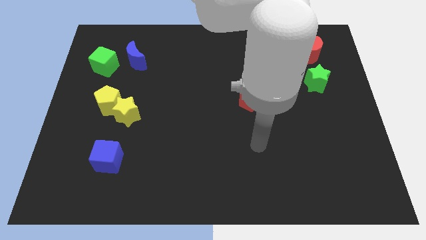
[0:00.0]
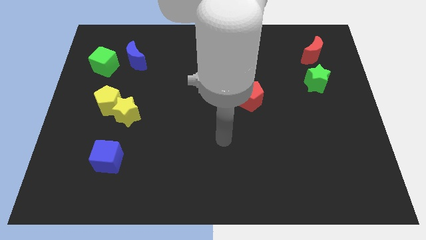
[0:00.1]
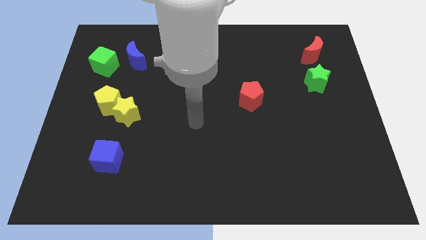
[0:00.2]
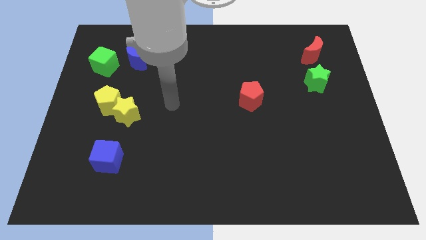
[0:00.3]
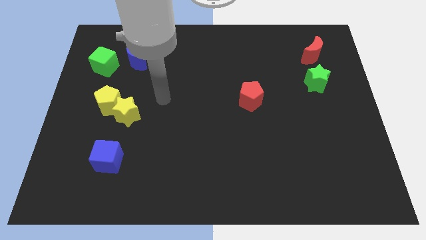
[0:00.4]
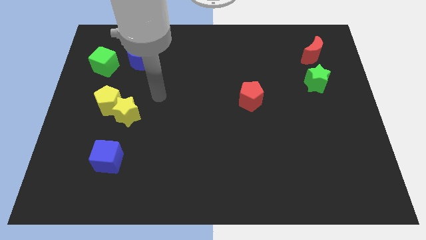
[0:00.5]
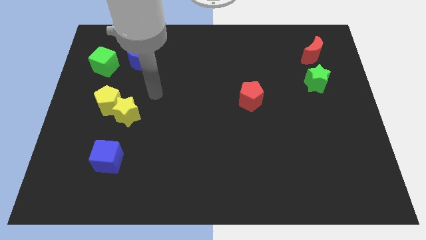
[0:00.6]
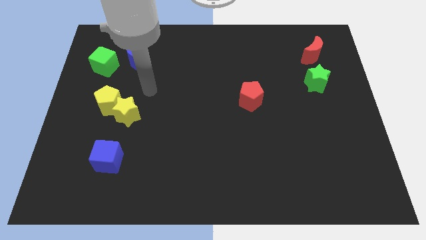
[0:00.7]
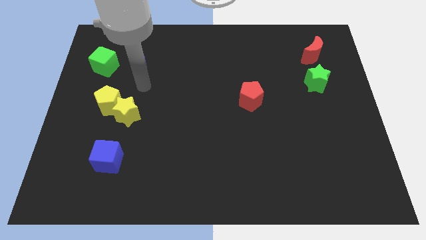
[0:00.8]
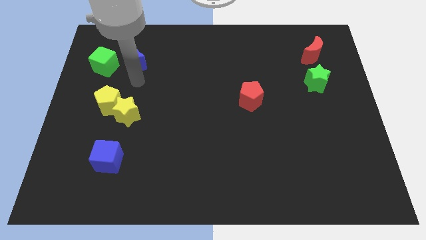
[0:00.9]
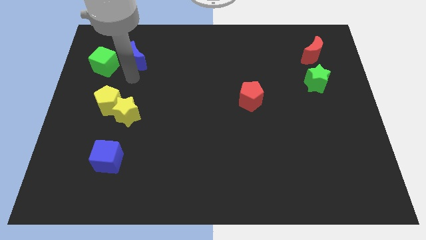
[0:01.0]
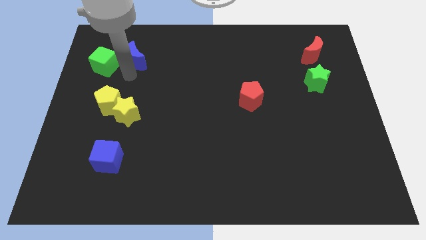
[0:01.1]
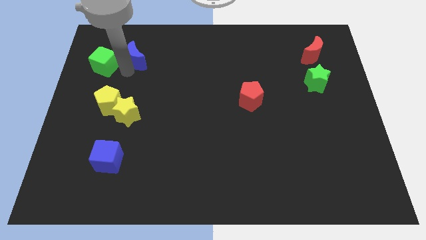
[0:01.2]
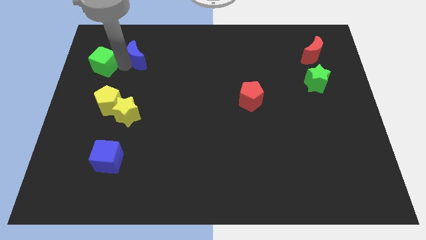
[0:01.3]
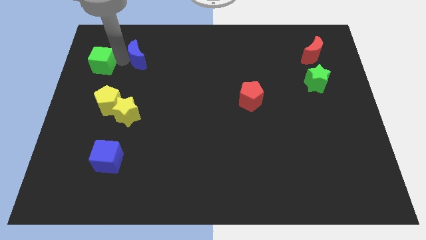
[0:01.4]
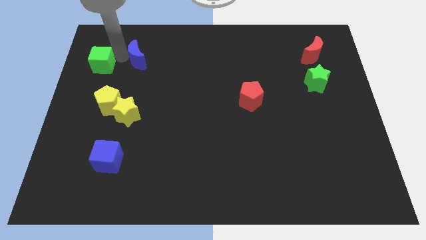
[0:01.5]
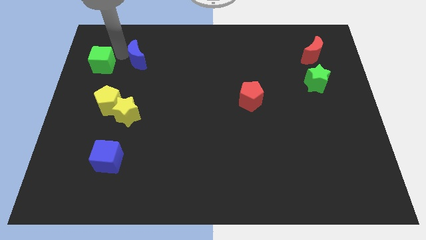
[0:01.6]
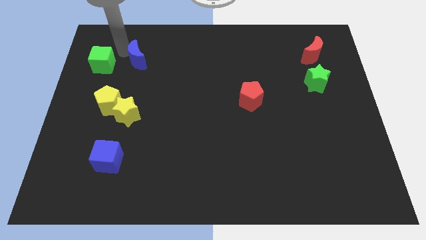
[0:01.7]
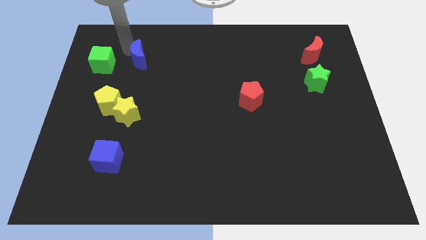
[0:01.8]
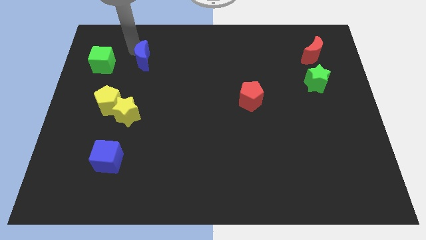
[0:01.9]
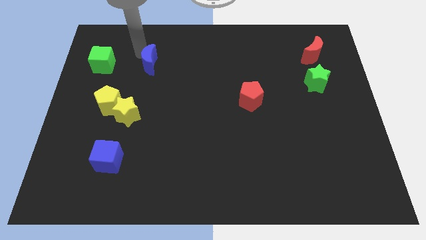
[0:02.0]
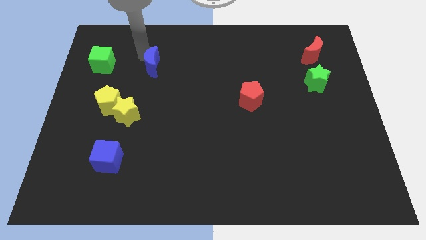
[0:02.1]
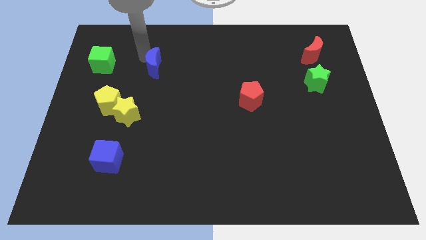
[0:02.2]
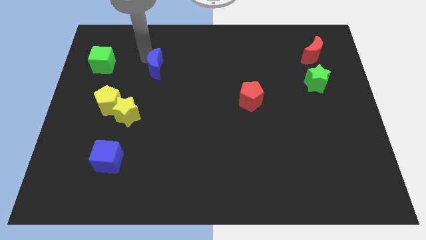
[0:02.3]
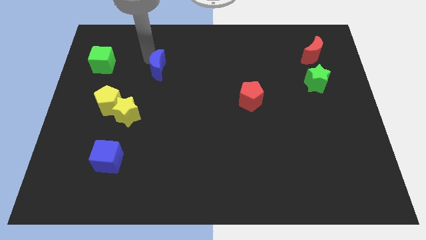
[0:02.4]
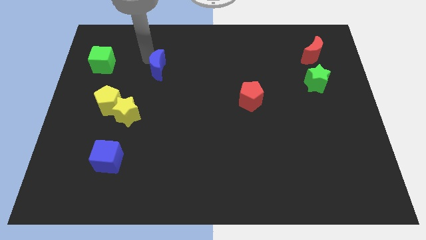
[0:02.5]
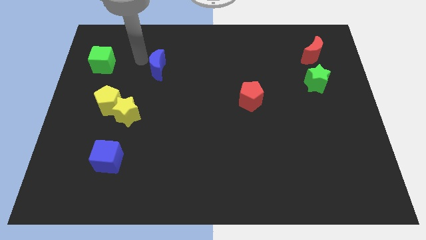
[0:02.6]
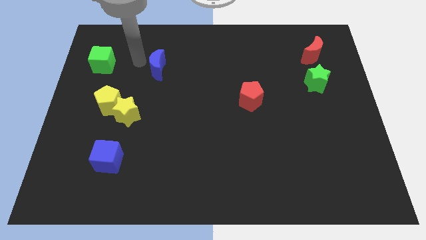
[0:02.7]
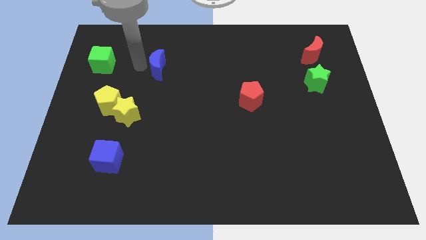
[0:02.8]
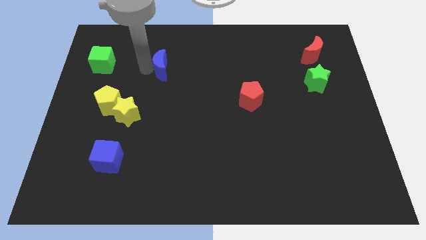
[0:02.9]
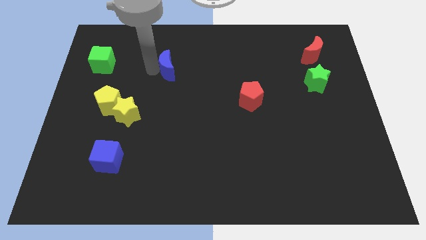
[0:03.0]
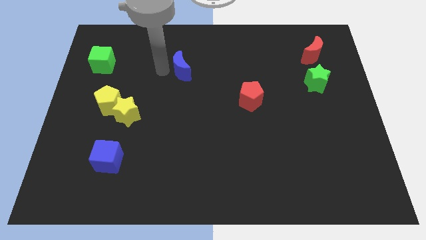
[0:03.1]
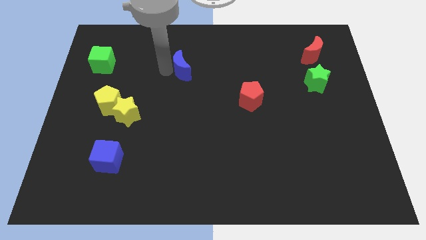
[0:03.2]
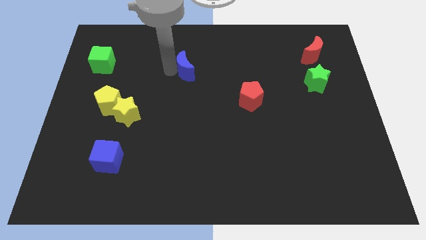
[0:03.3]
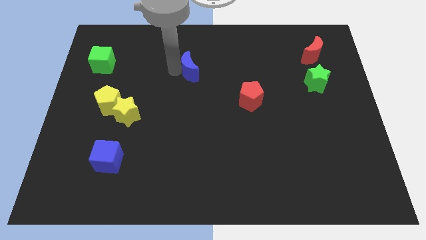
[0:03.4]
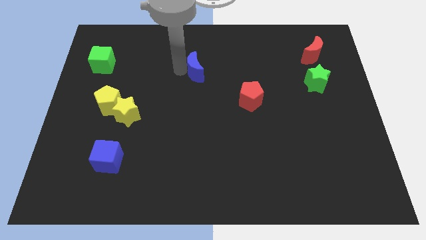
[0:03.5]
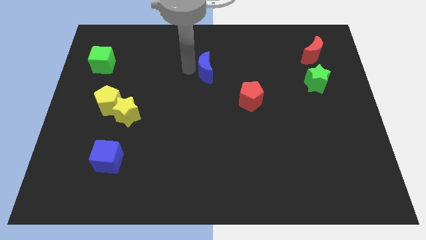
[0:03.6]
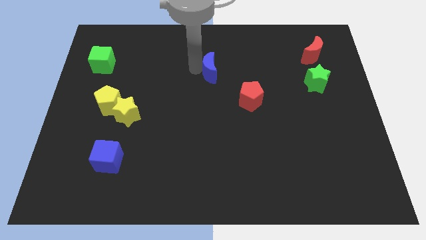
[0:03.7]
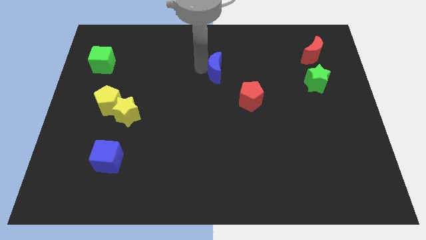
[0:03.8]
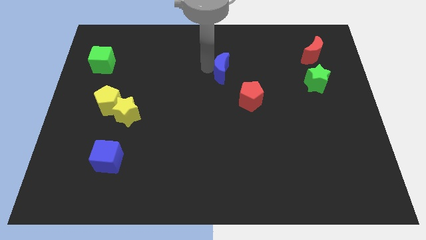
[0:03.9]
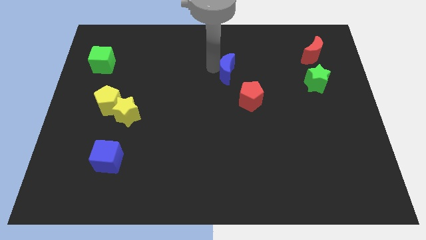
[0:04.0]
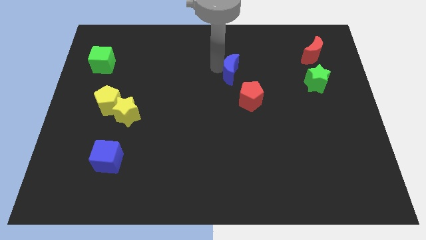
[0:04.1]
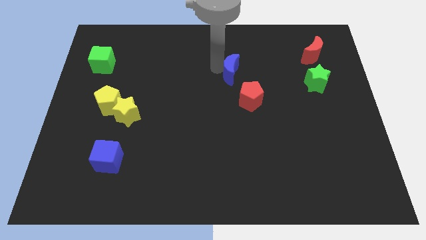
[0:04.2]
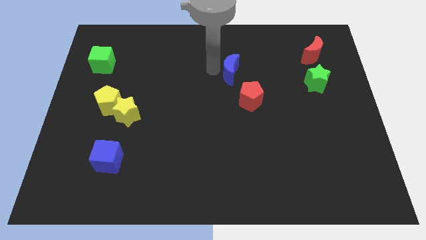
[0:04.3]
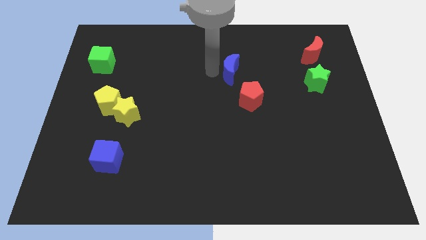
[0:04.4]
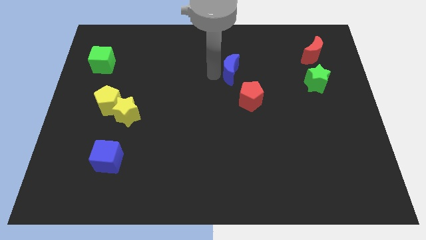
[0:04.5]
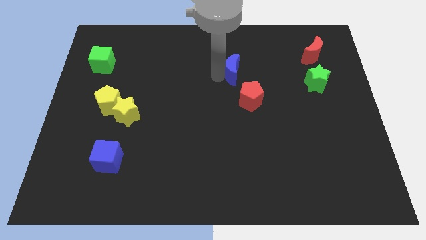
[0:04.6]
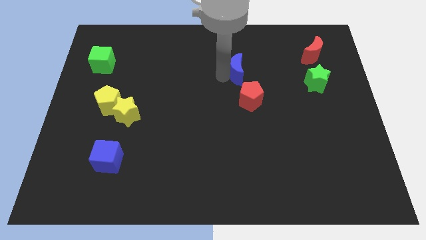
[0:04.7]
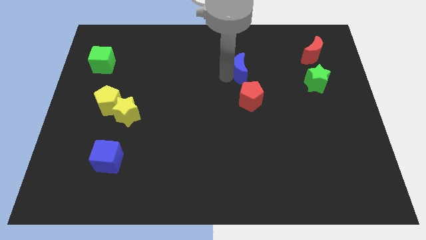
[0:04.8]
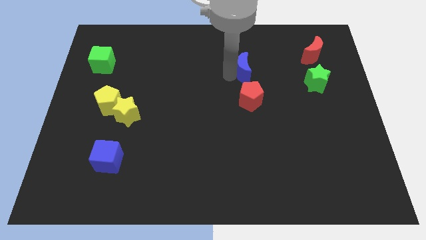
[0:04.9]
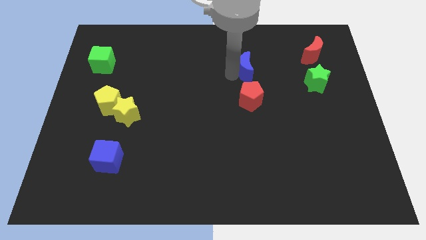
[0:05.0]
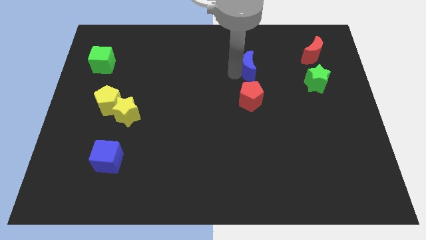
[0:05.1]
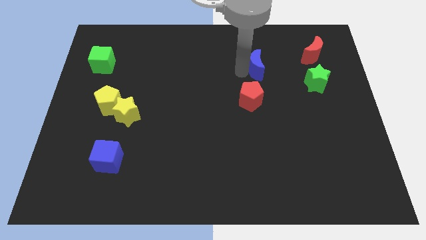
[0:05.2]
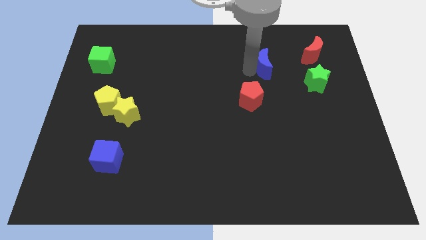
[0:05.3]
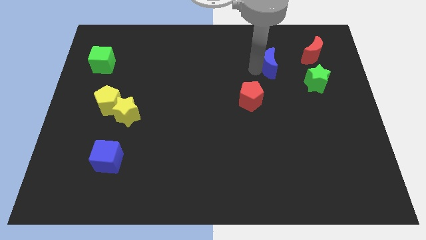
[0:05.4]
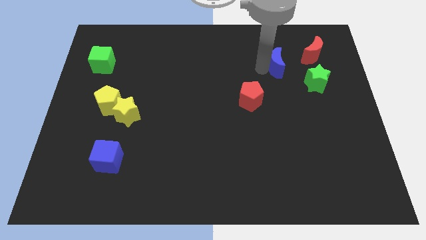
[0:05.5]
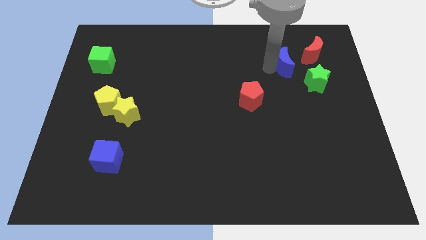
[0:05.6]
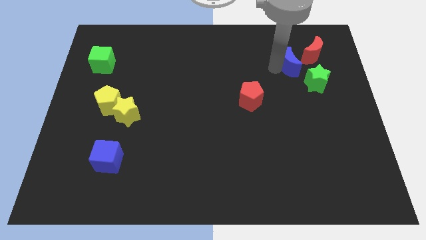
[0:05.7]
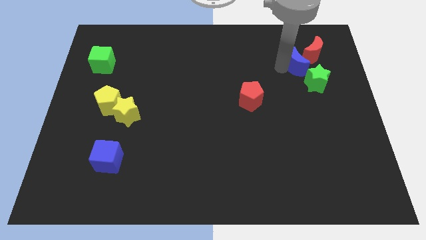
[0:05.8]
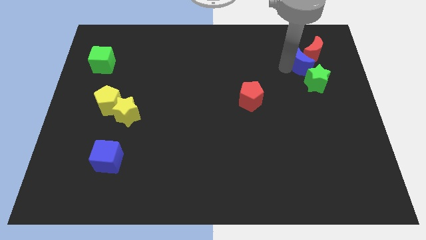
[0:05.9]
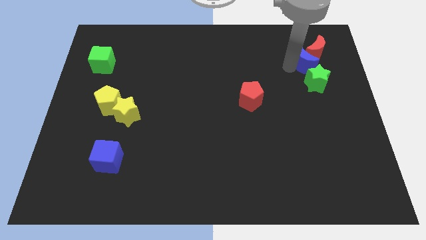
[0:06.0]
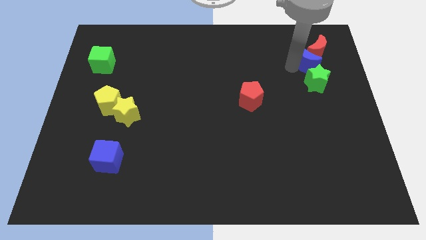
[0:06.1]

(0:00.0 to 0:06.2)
put the blue moon close to the red moon

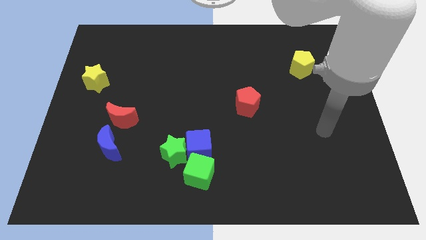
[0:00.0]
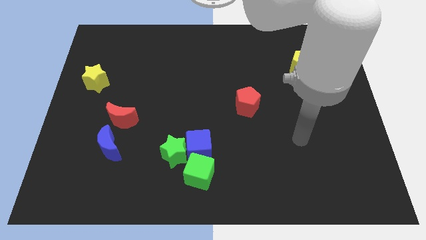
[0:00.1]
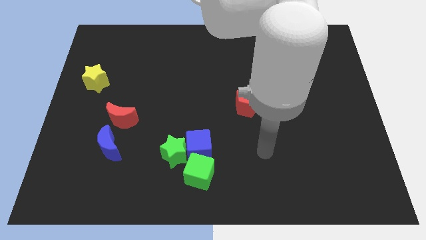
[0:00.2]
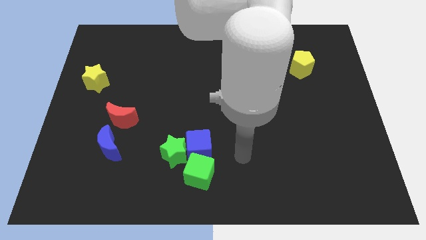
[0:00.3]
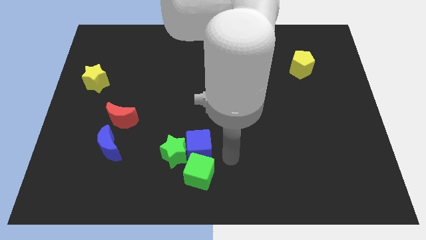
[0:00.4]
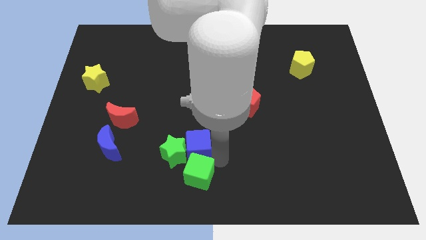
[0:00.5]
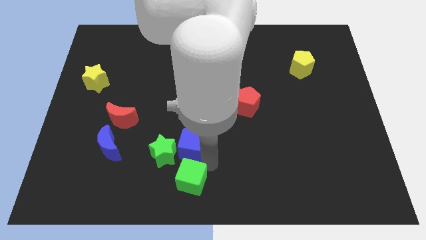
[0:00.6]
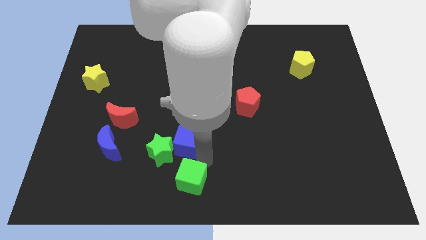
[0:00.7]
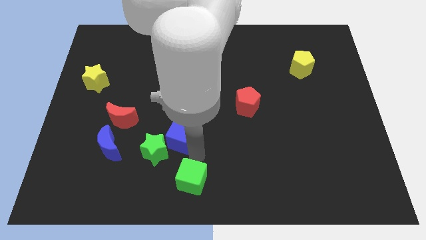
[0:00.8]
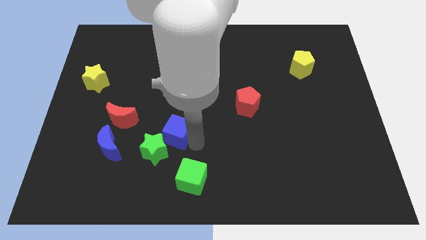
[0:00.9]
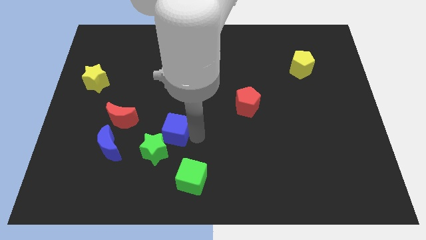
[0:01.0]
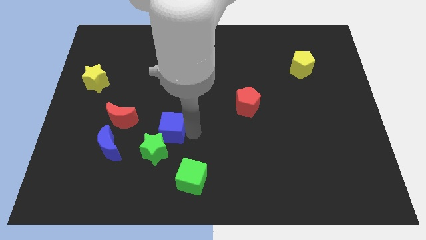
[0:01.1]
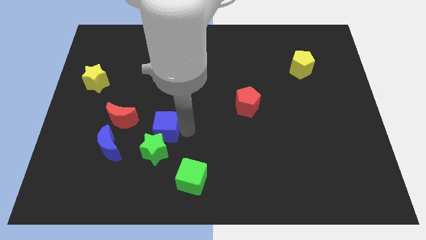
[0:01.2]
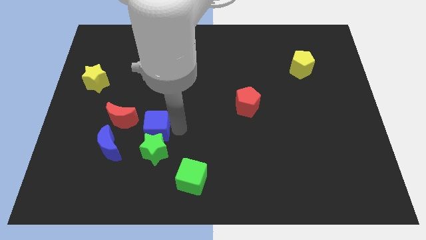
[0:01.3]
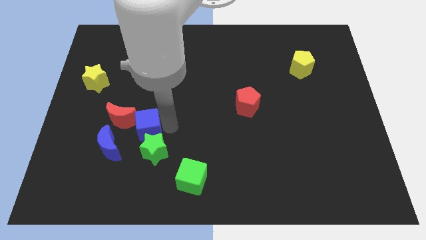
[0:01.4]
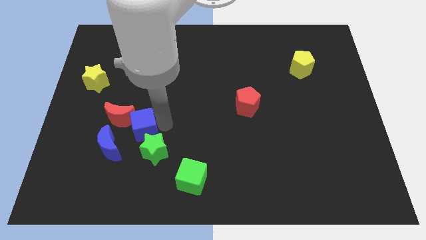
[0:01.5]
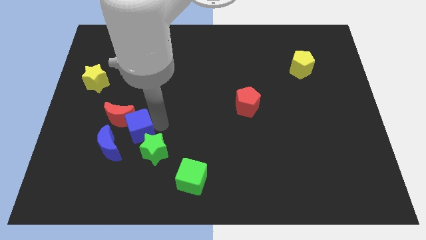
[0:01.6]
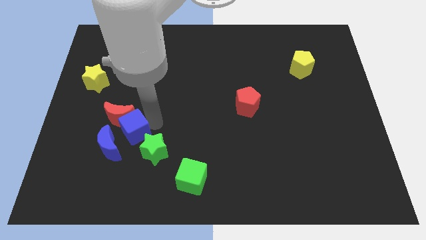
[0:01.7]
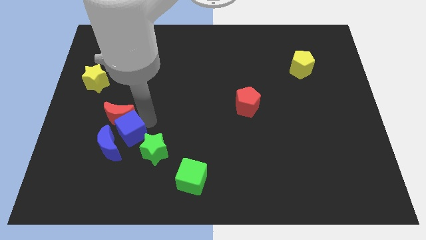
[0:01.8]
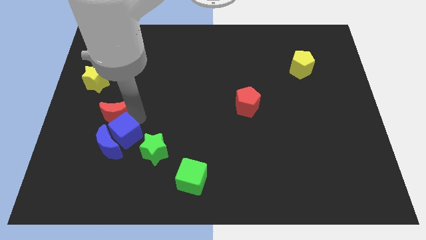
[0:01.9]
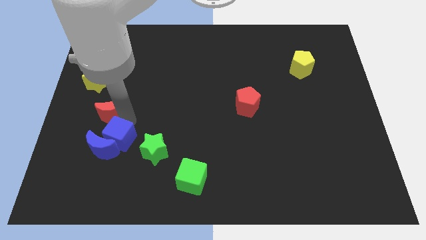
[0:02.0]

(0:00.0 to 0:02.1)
push the blue cube towards the blue moon
